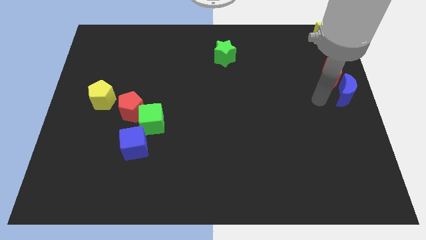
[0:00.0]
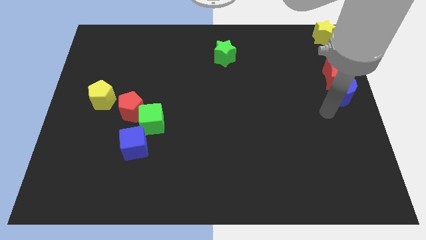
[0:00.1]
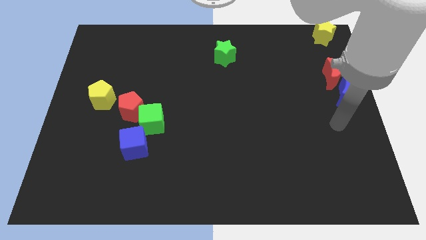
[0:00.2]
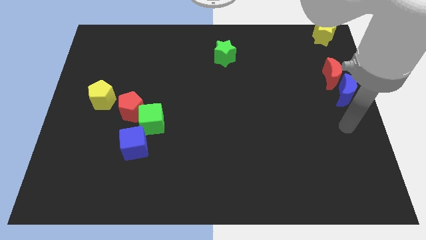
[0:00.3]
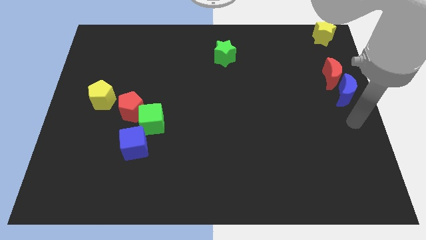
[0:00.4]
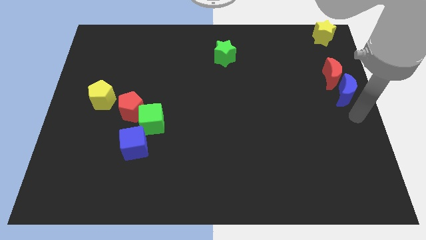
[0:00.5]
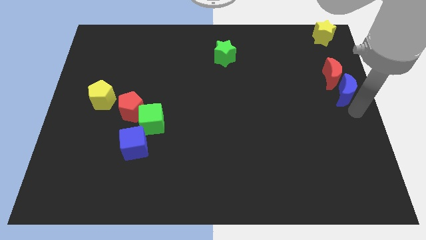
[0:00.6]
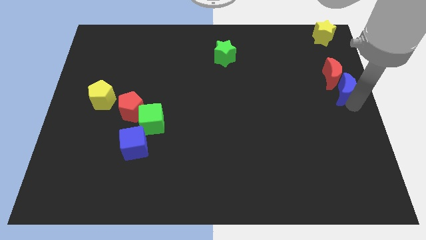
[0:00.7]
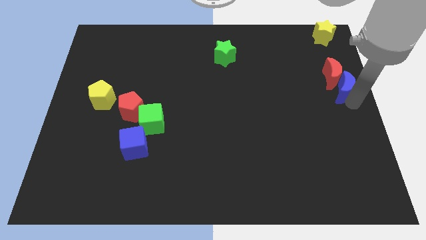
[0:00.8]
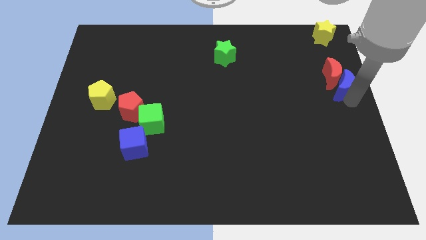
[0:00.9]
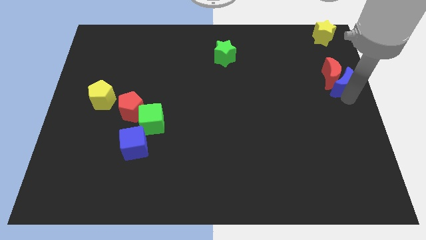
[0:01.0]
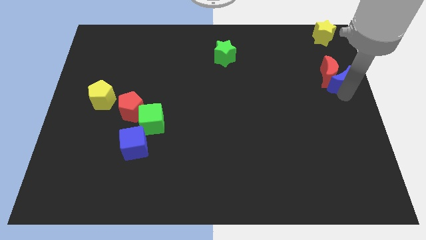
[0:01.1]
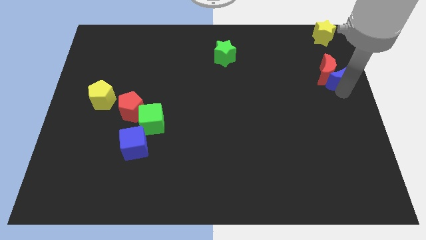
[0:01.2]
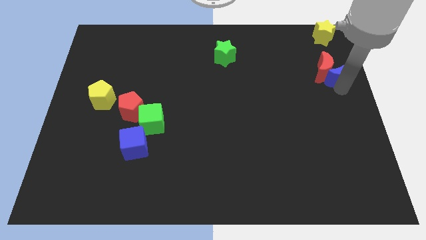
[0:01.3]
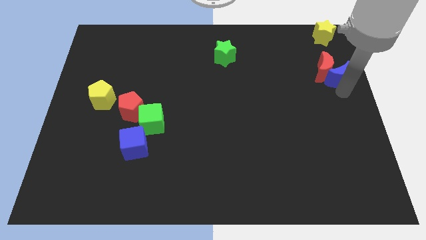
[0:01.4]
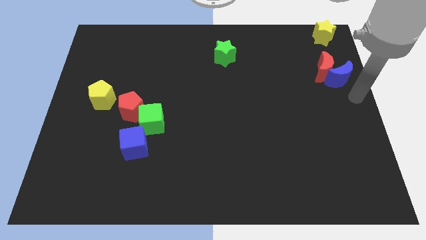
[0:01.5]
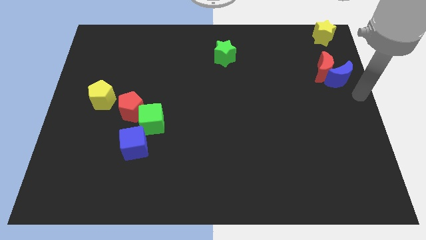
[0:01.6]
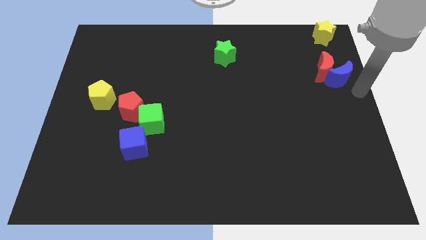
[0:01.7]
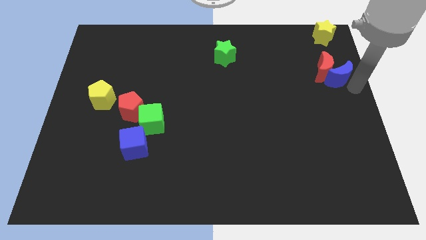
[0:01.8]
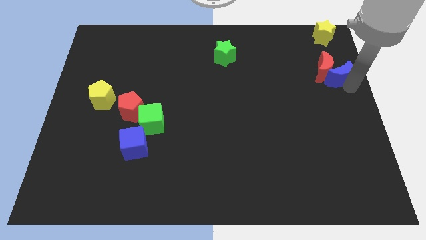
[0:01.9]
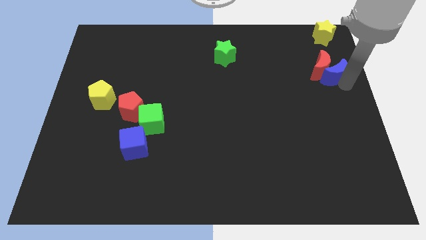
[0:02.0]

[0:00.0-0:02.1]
place the red moon and blue moon bottom of the yellow star

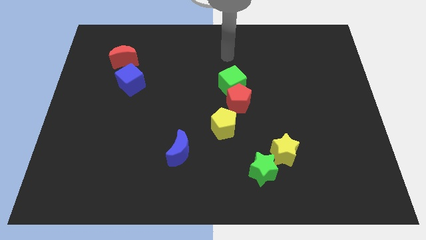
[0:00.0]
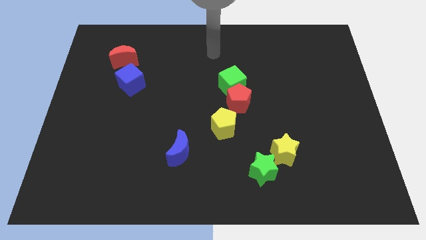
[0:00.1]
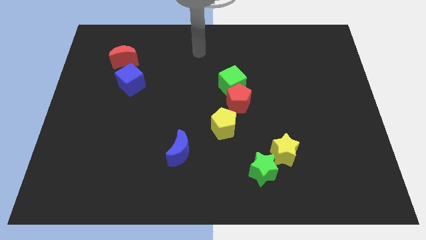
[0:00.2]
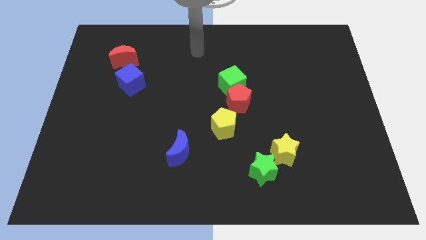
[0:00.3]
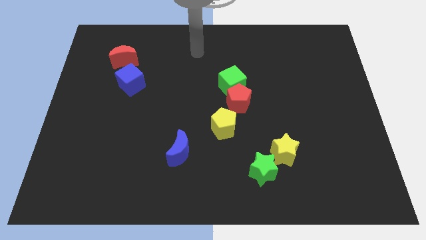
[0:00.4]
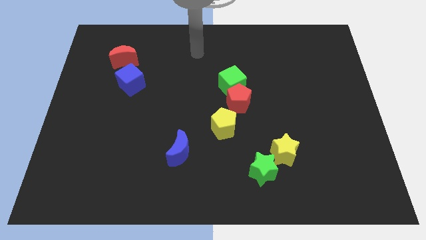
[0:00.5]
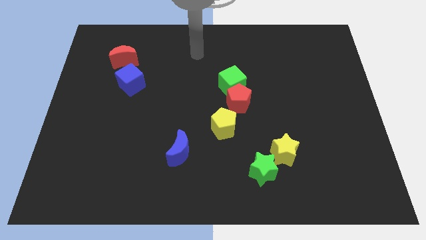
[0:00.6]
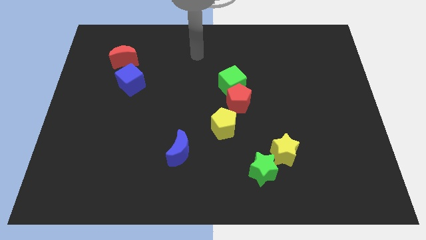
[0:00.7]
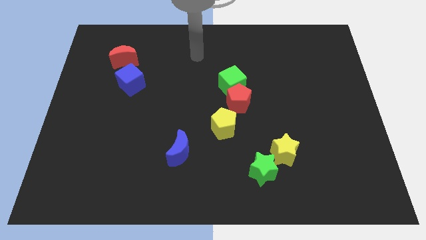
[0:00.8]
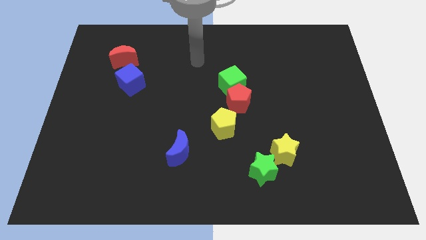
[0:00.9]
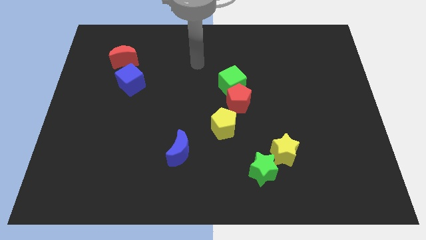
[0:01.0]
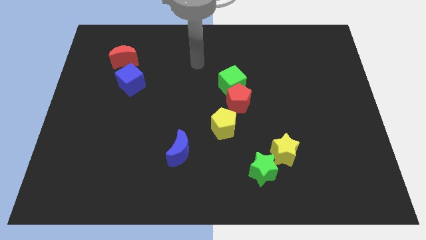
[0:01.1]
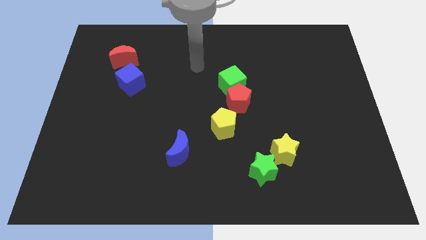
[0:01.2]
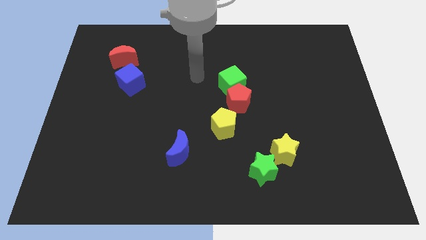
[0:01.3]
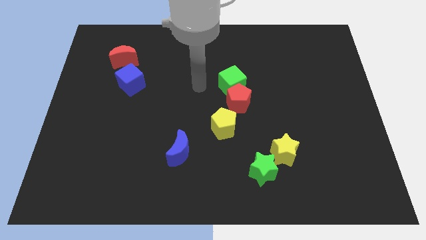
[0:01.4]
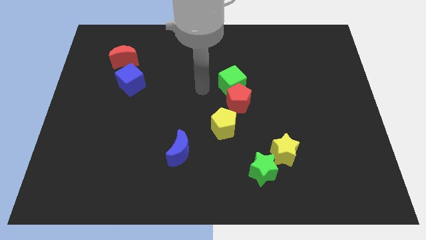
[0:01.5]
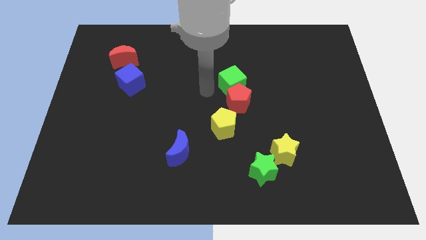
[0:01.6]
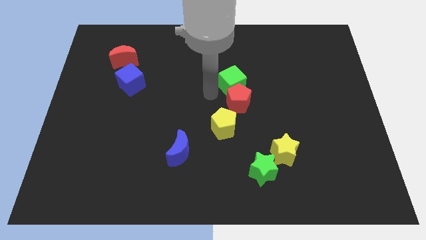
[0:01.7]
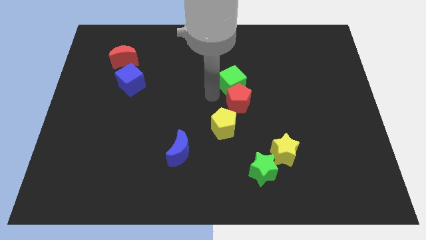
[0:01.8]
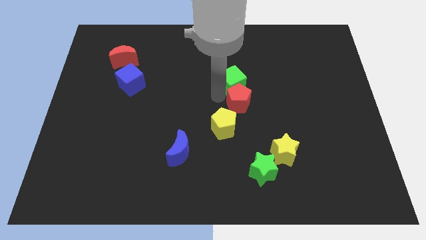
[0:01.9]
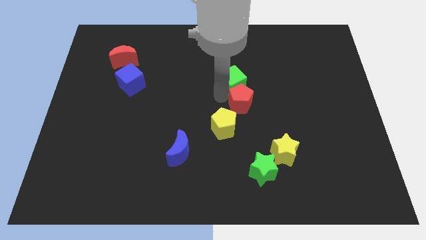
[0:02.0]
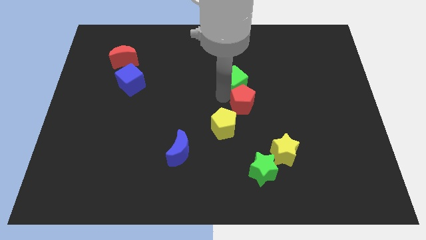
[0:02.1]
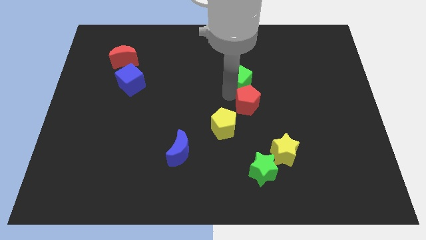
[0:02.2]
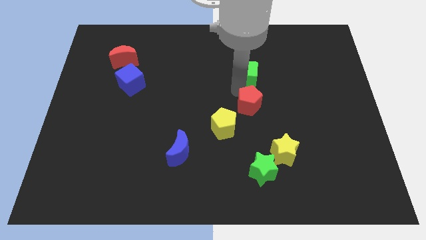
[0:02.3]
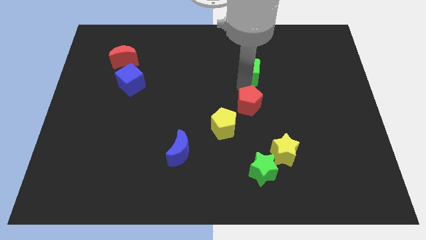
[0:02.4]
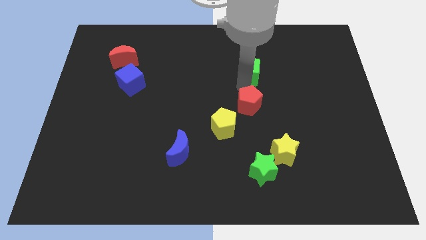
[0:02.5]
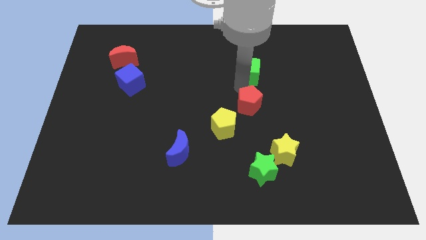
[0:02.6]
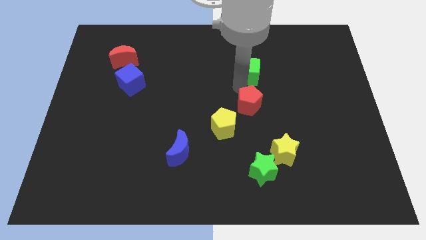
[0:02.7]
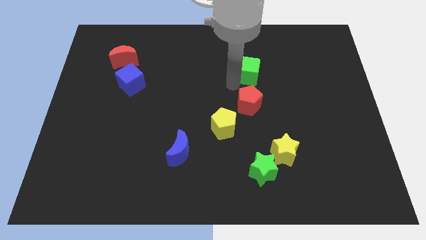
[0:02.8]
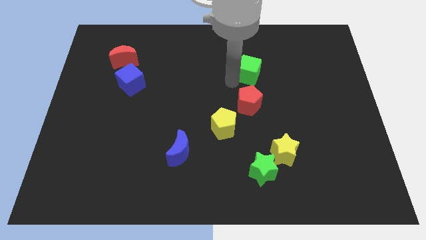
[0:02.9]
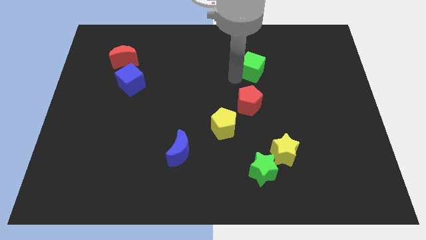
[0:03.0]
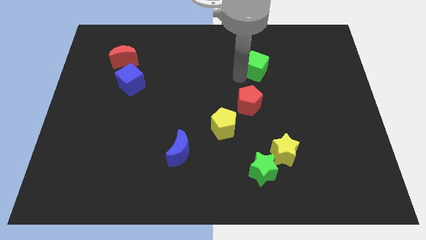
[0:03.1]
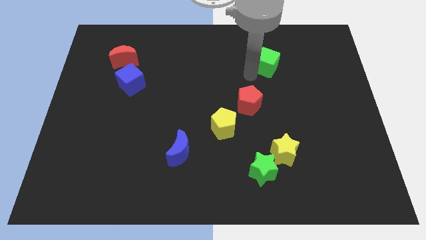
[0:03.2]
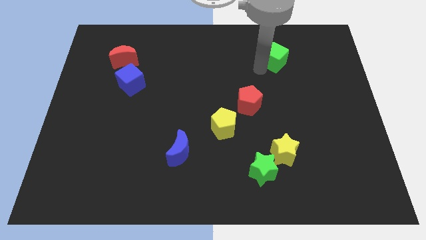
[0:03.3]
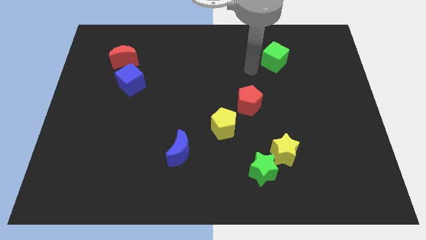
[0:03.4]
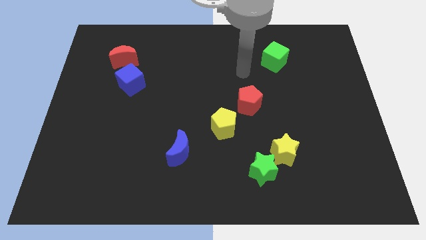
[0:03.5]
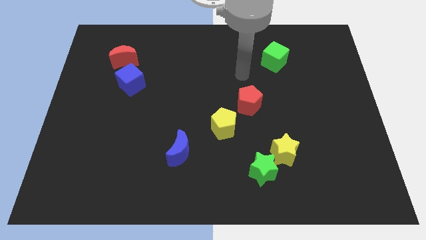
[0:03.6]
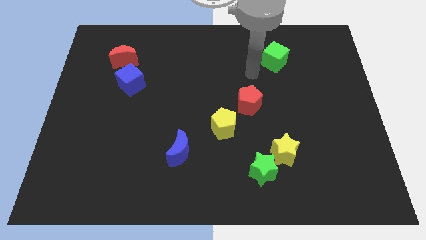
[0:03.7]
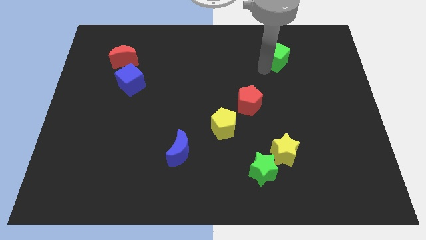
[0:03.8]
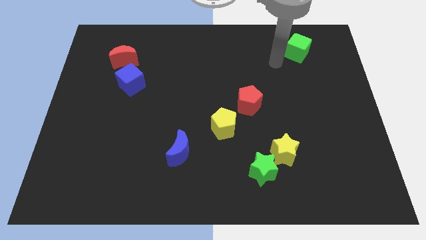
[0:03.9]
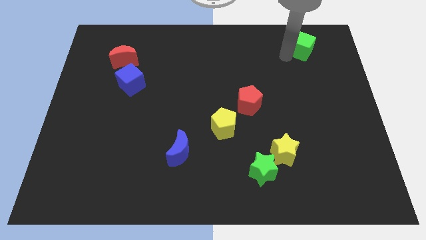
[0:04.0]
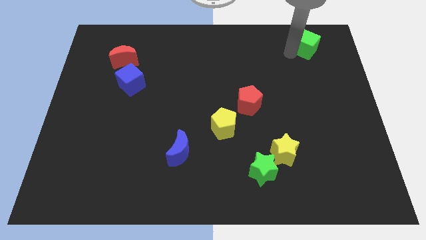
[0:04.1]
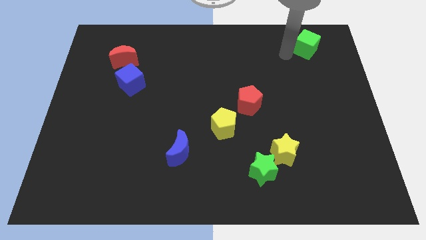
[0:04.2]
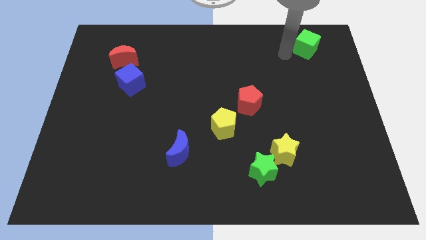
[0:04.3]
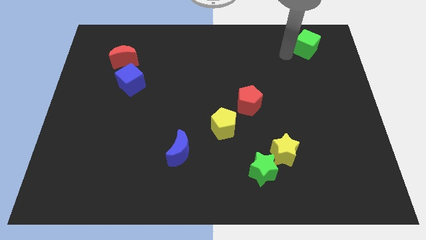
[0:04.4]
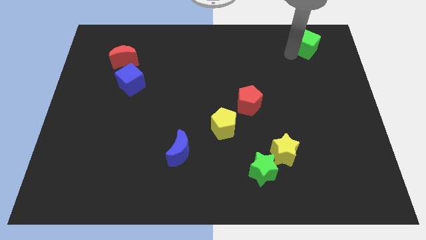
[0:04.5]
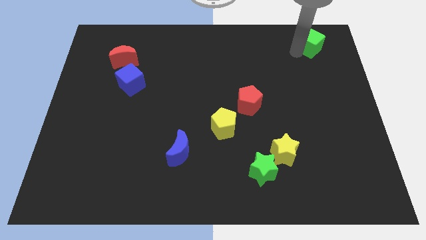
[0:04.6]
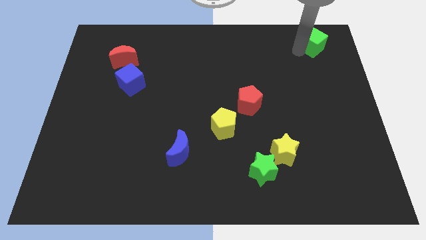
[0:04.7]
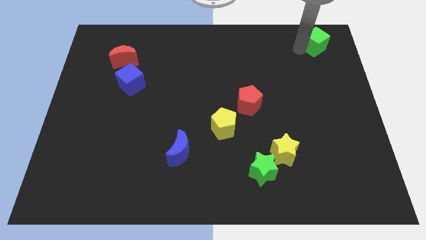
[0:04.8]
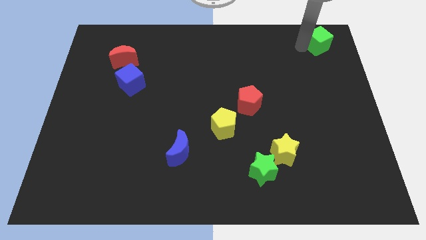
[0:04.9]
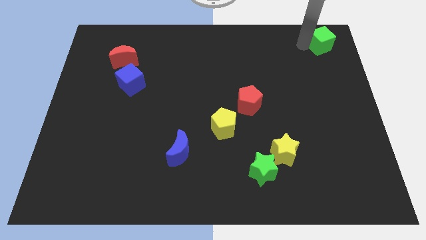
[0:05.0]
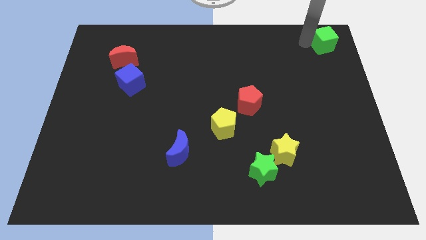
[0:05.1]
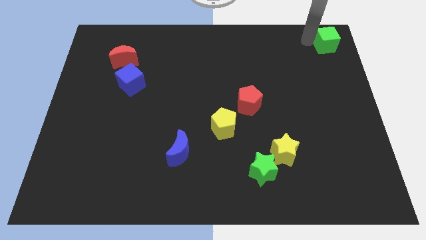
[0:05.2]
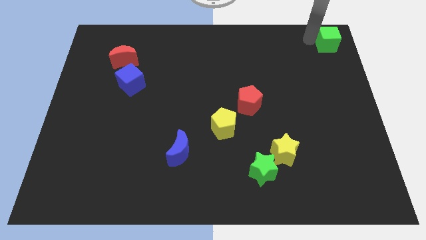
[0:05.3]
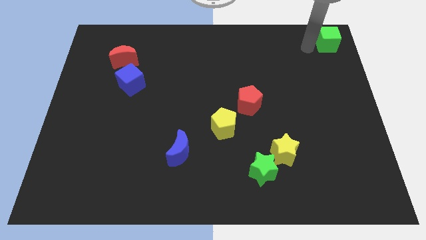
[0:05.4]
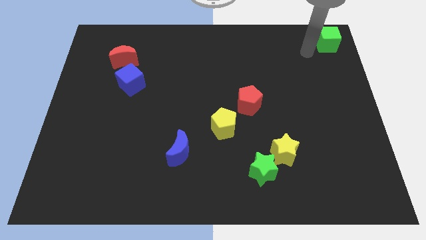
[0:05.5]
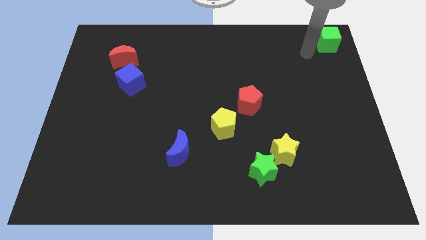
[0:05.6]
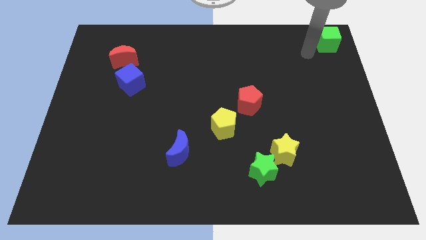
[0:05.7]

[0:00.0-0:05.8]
push the green cube to the top right corner of the board

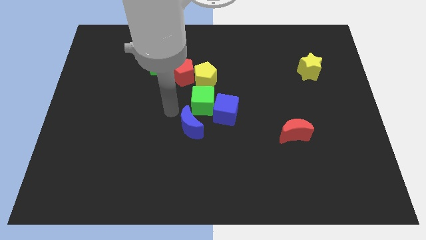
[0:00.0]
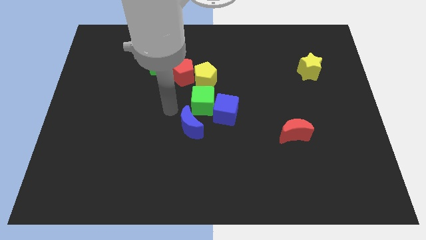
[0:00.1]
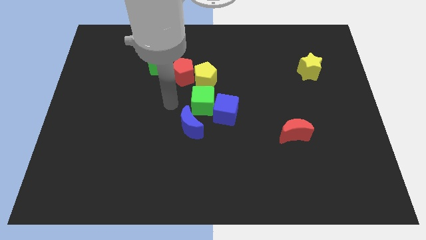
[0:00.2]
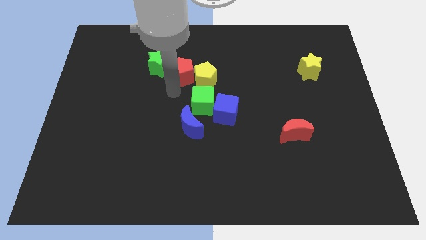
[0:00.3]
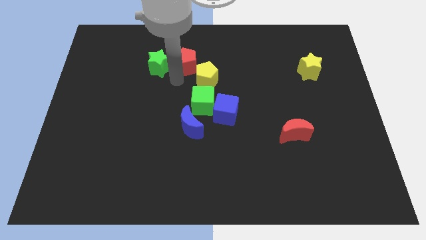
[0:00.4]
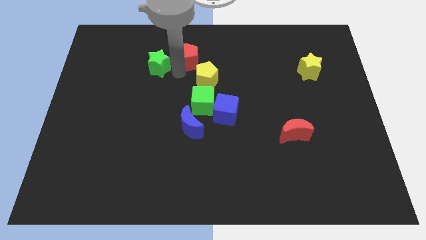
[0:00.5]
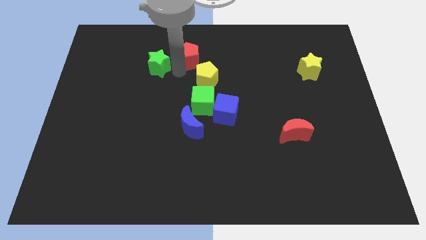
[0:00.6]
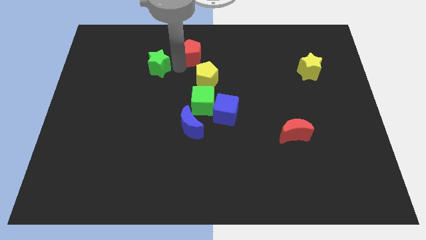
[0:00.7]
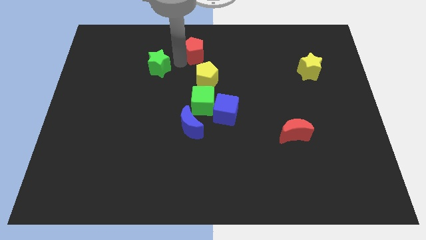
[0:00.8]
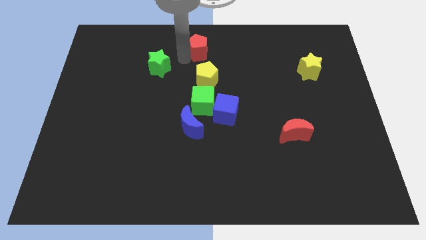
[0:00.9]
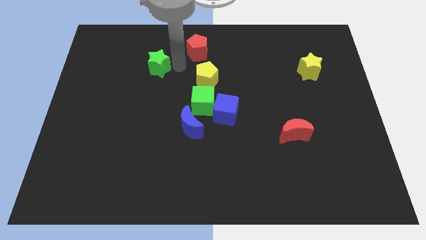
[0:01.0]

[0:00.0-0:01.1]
move red pentagon away from yellow pentagon
